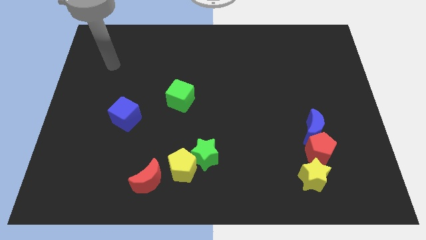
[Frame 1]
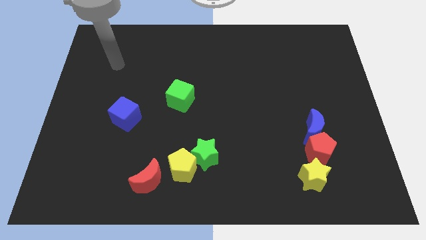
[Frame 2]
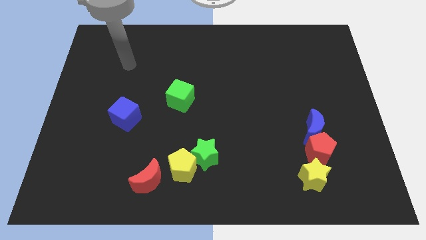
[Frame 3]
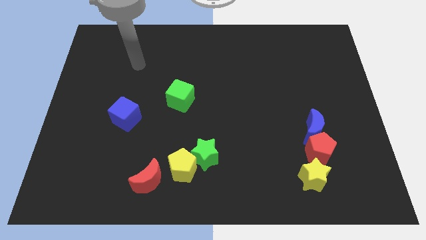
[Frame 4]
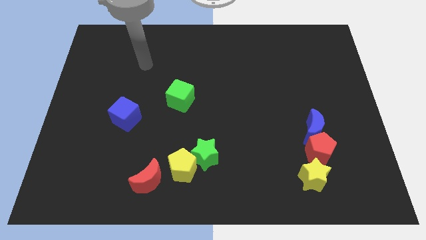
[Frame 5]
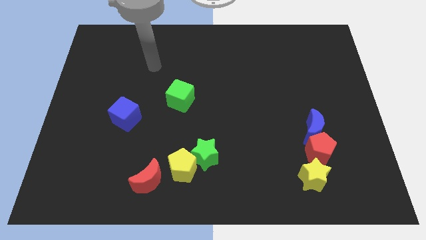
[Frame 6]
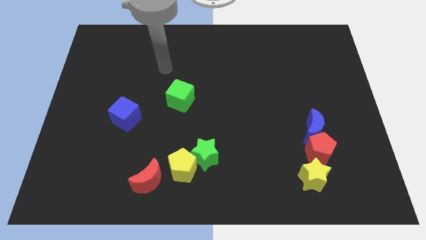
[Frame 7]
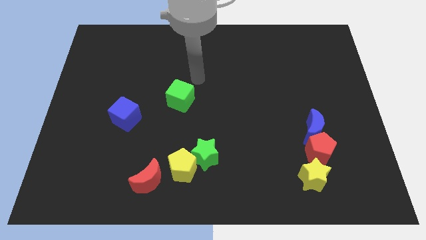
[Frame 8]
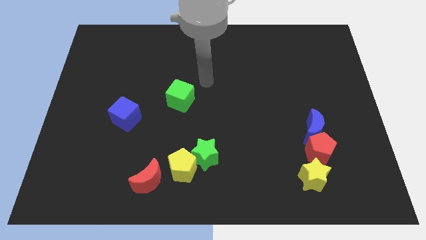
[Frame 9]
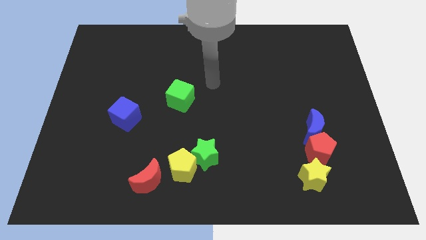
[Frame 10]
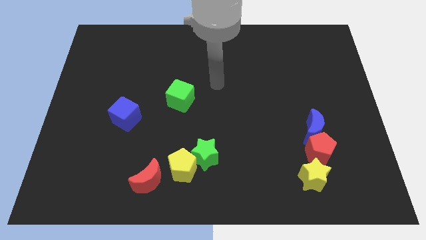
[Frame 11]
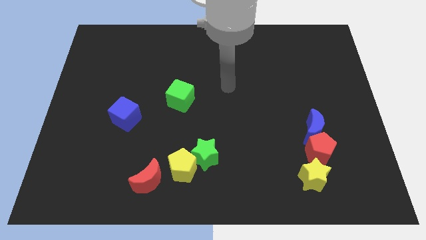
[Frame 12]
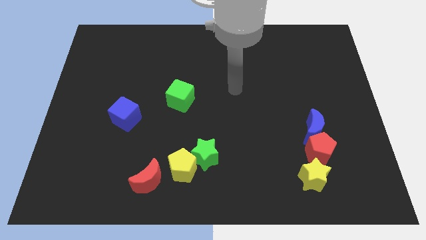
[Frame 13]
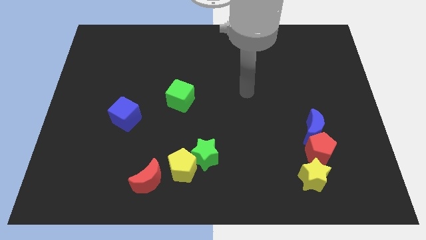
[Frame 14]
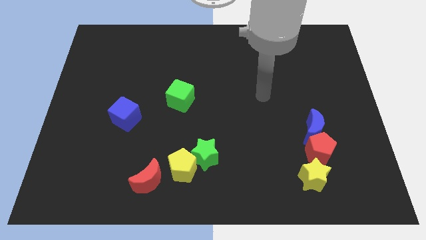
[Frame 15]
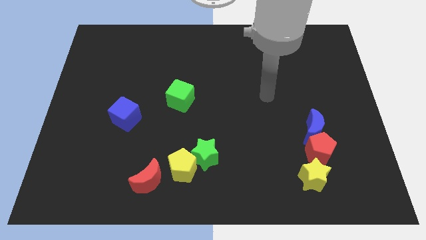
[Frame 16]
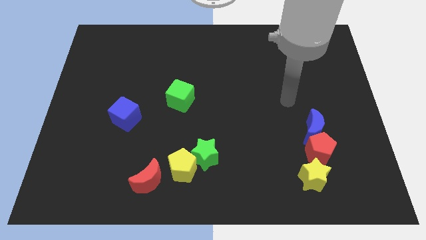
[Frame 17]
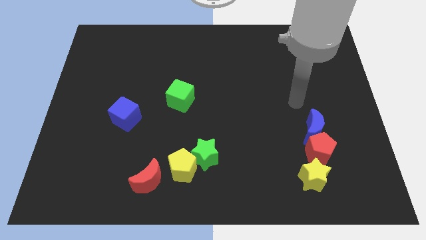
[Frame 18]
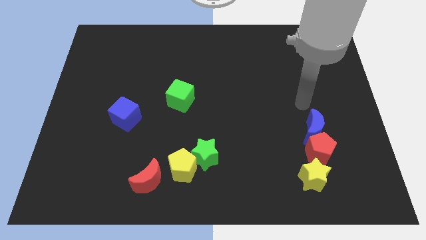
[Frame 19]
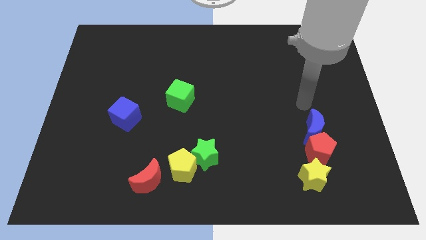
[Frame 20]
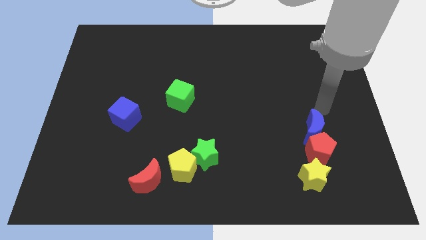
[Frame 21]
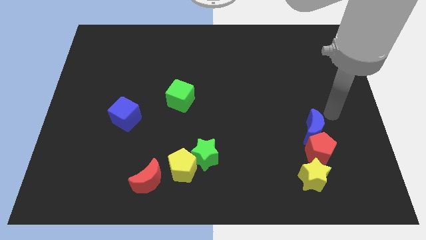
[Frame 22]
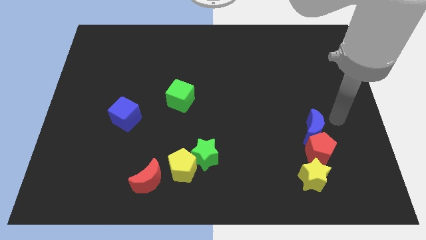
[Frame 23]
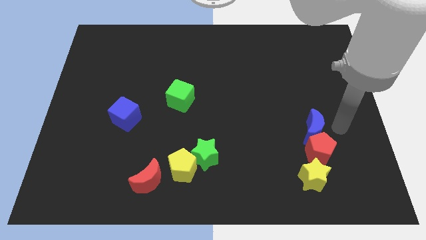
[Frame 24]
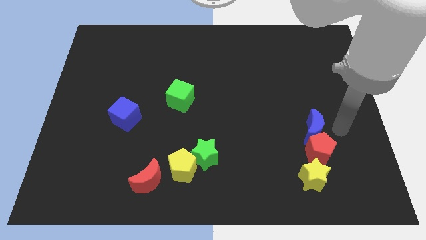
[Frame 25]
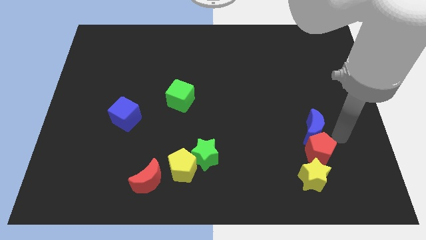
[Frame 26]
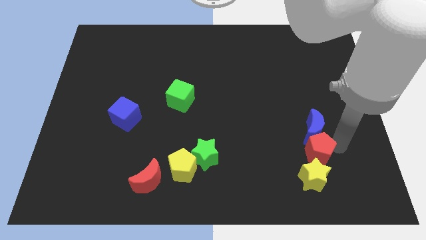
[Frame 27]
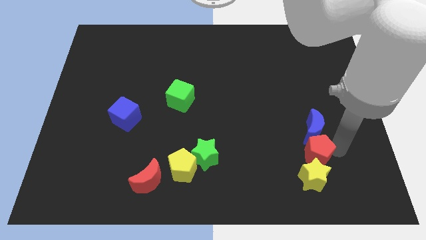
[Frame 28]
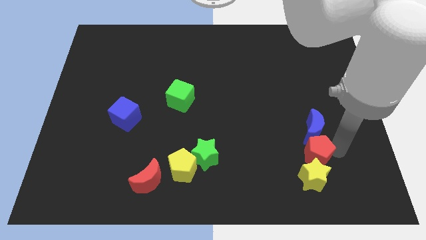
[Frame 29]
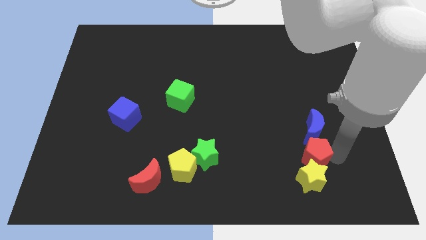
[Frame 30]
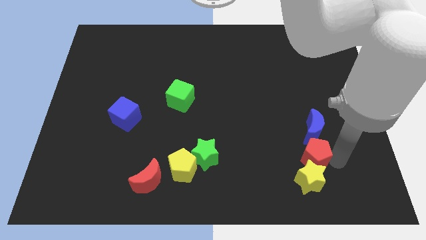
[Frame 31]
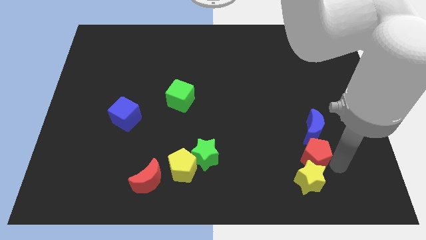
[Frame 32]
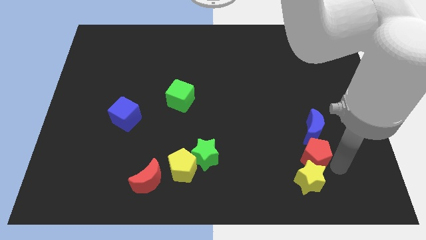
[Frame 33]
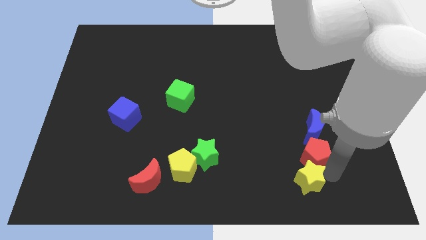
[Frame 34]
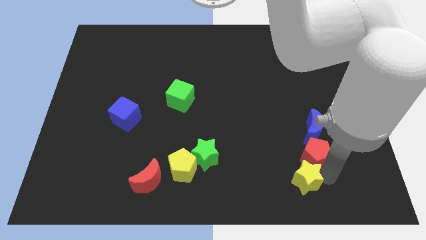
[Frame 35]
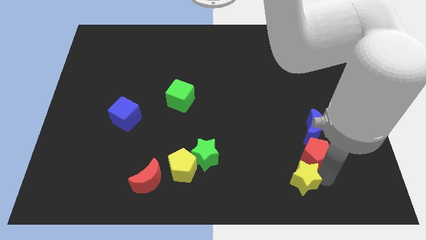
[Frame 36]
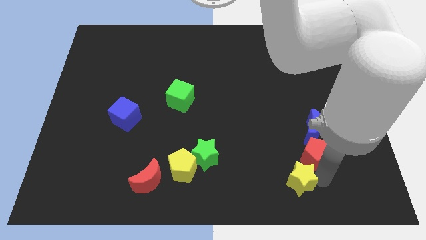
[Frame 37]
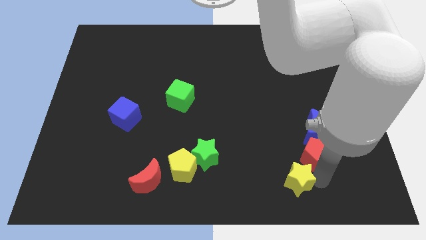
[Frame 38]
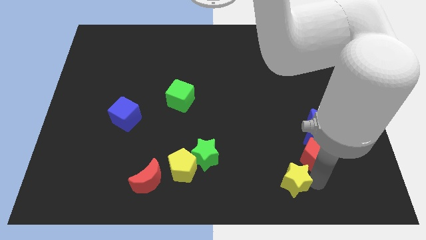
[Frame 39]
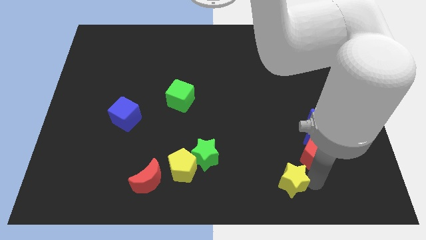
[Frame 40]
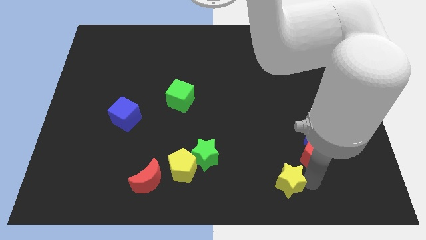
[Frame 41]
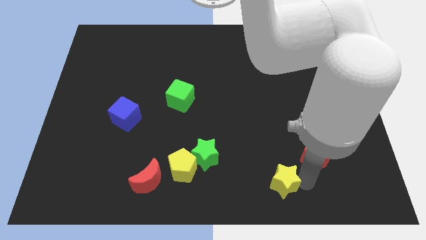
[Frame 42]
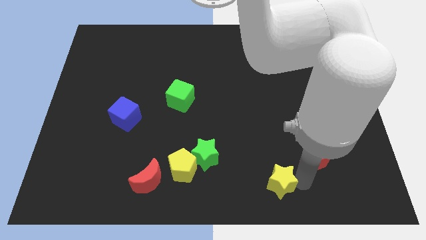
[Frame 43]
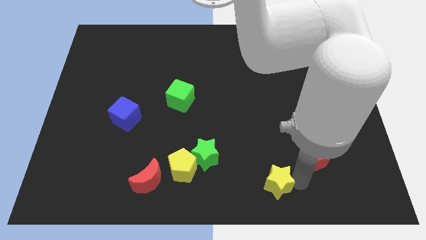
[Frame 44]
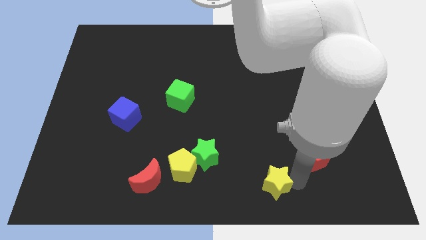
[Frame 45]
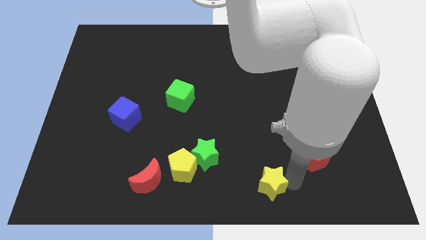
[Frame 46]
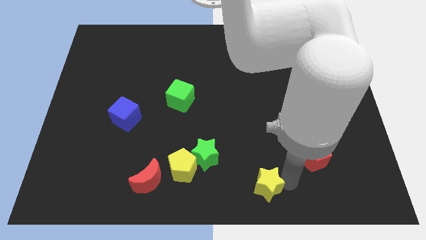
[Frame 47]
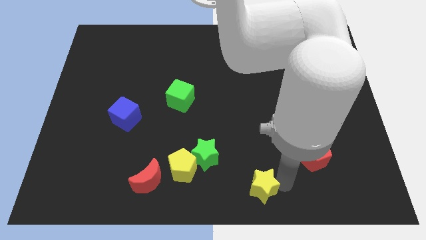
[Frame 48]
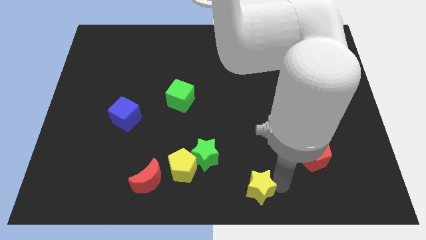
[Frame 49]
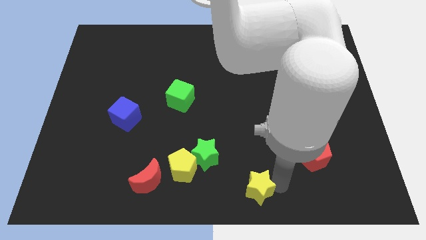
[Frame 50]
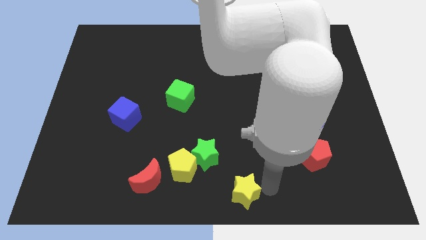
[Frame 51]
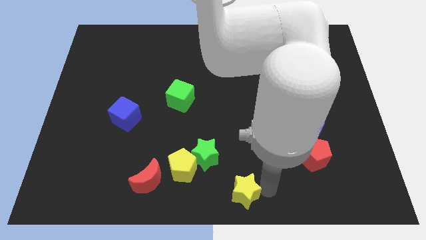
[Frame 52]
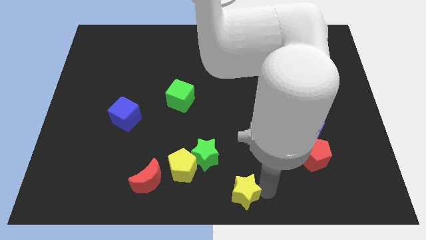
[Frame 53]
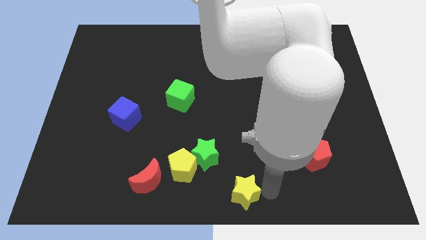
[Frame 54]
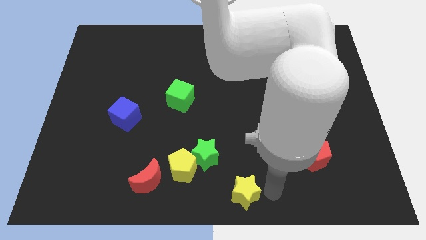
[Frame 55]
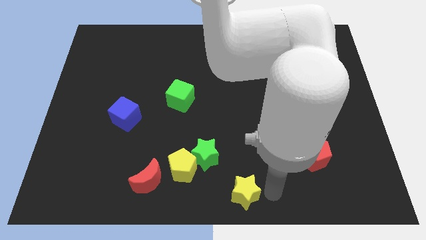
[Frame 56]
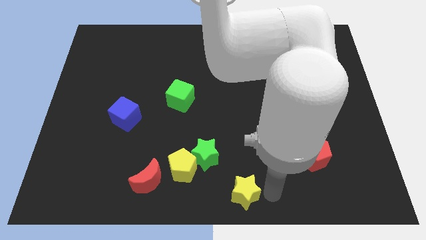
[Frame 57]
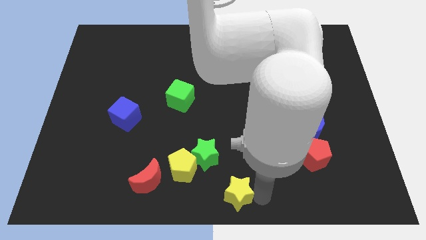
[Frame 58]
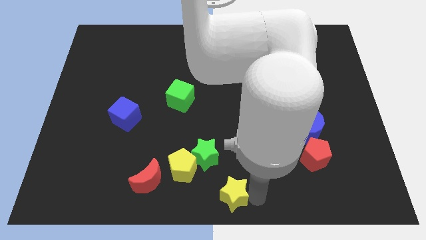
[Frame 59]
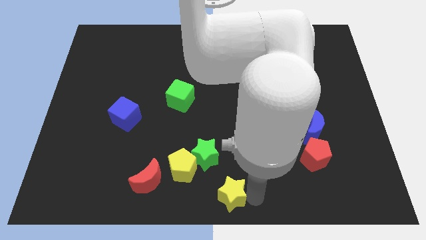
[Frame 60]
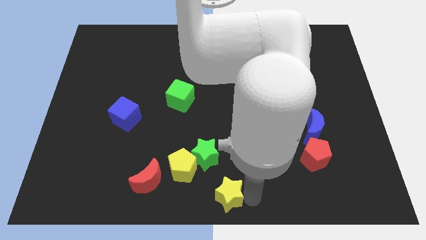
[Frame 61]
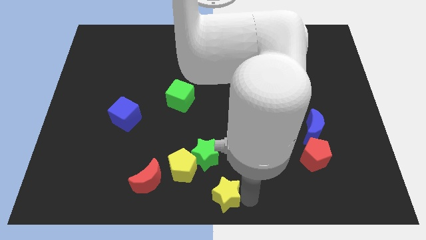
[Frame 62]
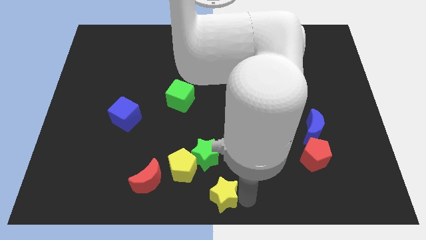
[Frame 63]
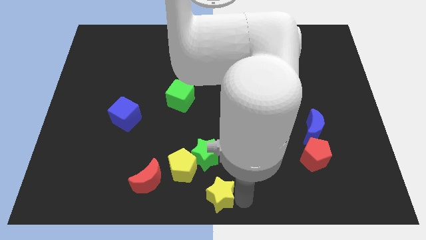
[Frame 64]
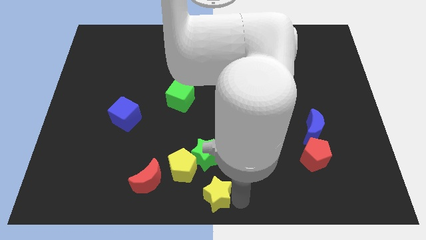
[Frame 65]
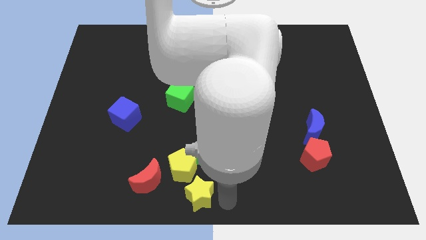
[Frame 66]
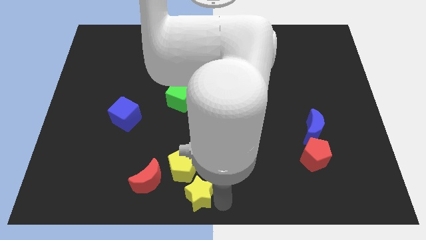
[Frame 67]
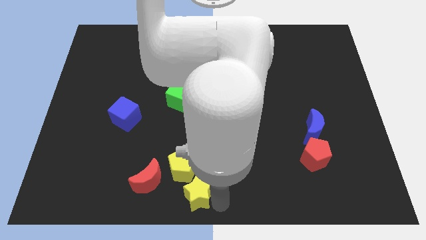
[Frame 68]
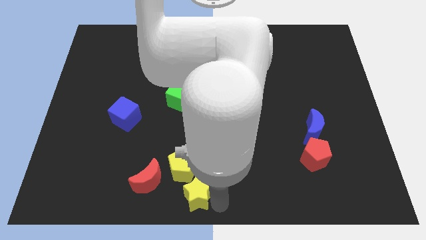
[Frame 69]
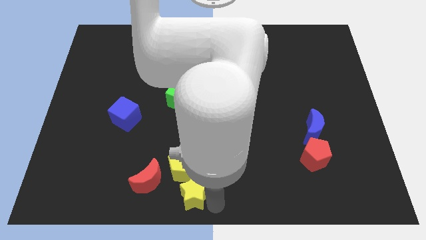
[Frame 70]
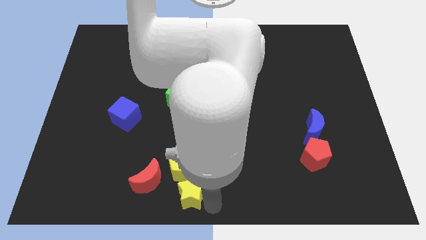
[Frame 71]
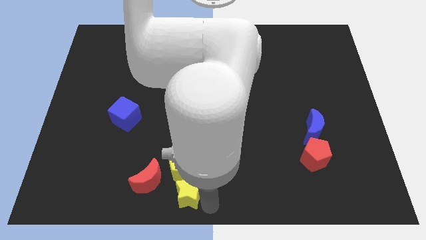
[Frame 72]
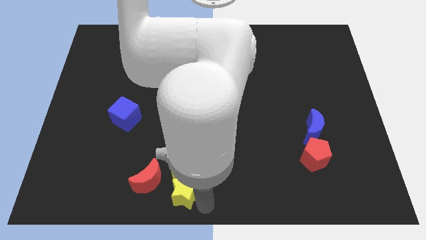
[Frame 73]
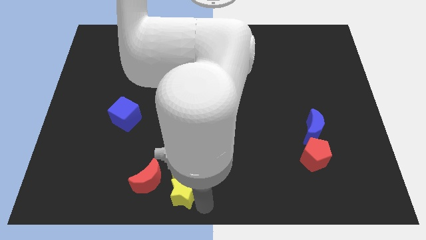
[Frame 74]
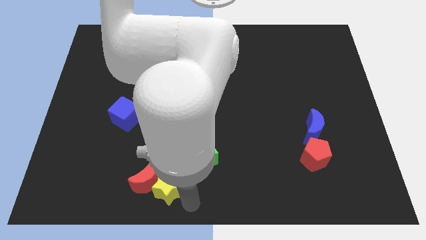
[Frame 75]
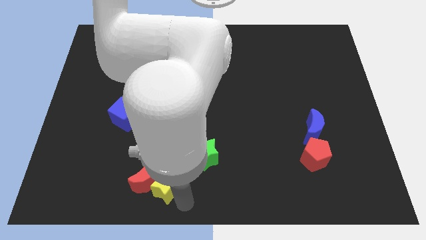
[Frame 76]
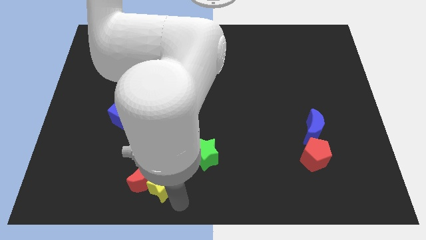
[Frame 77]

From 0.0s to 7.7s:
move the yellow star next to the red moon

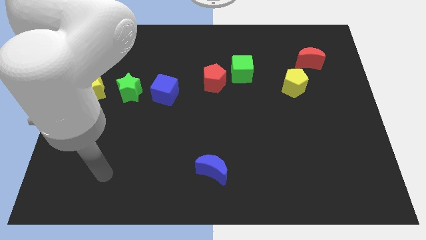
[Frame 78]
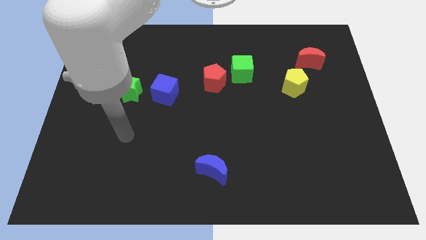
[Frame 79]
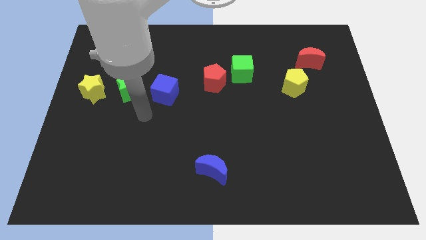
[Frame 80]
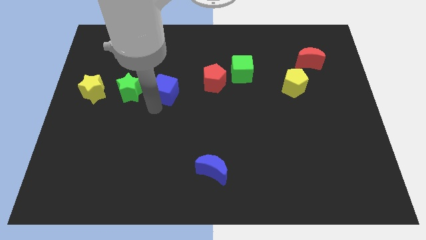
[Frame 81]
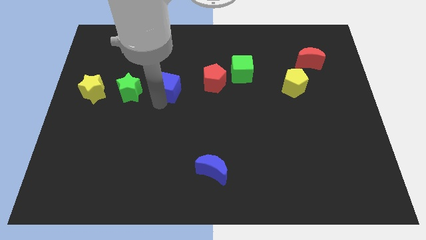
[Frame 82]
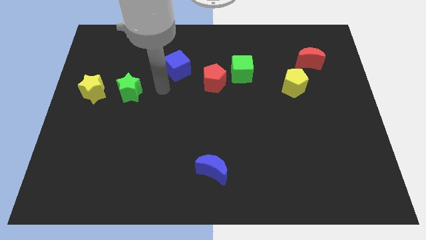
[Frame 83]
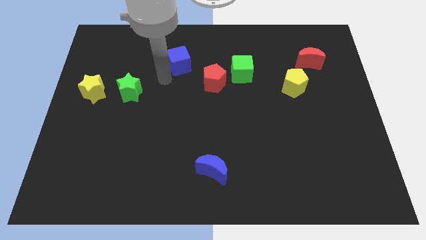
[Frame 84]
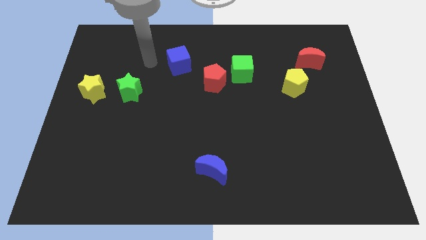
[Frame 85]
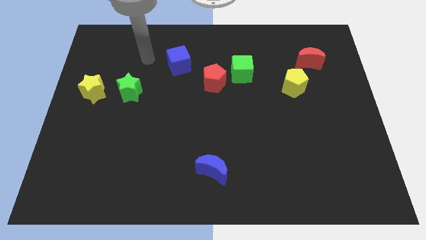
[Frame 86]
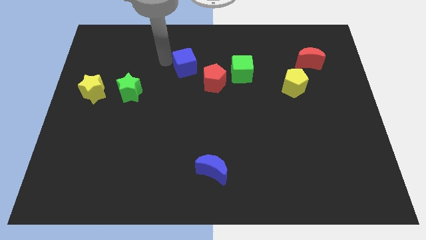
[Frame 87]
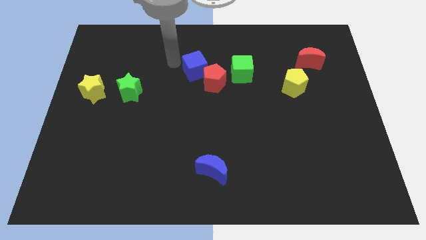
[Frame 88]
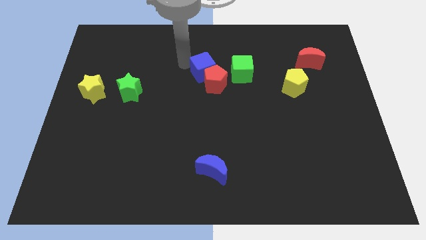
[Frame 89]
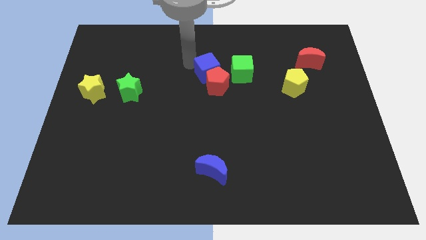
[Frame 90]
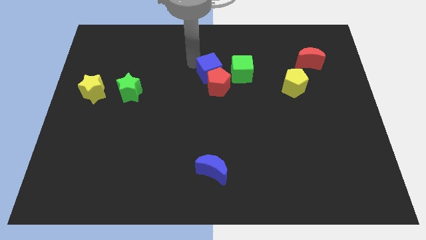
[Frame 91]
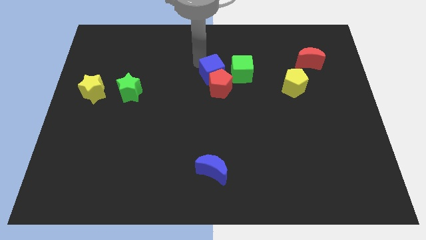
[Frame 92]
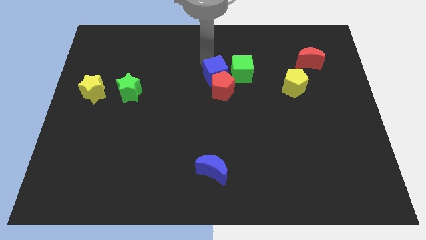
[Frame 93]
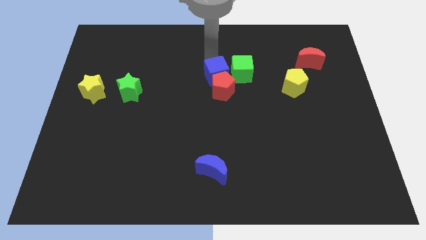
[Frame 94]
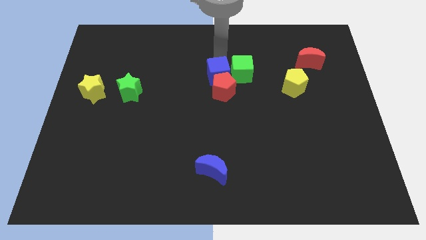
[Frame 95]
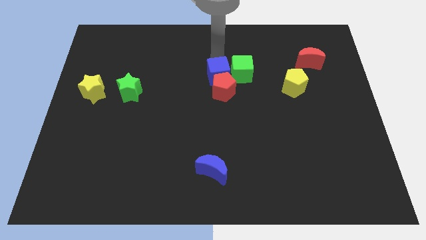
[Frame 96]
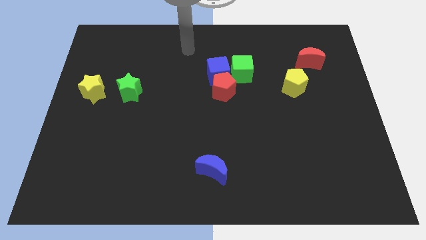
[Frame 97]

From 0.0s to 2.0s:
slide the blue cube close to the green cube
